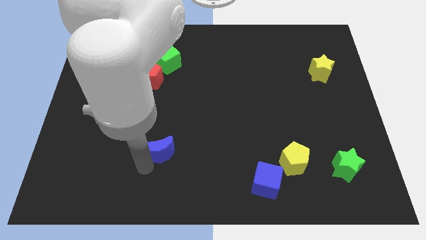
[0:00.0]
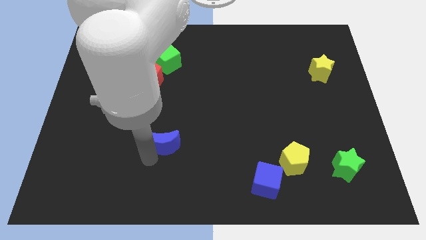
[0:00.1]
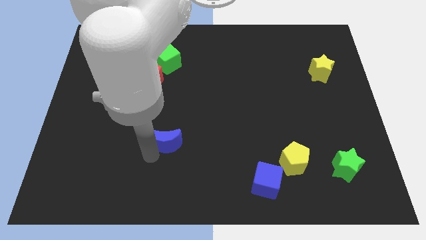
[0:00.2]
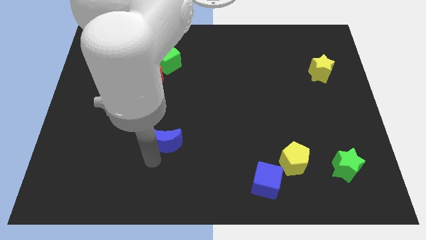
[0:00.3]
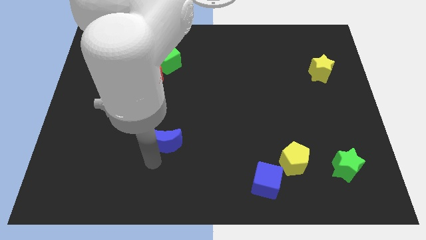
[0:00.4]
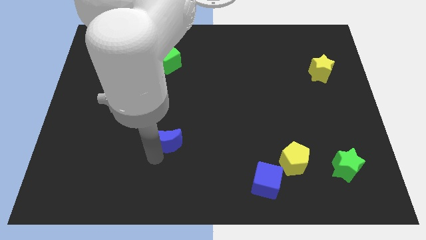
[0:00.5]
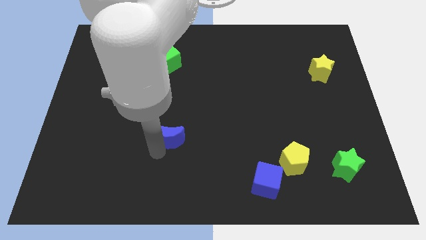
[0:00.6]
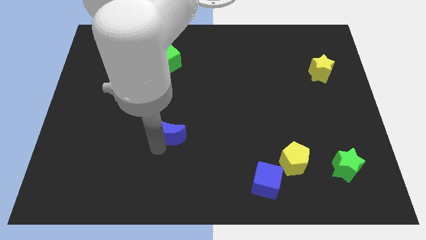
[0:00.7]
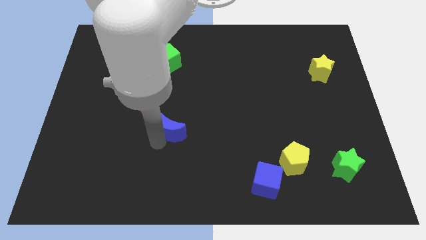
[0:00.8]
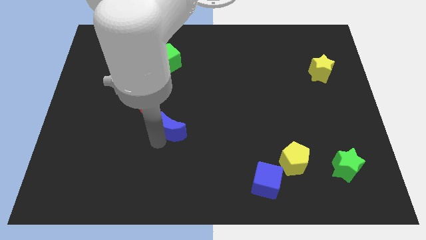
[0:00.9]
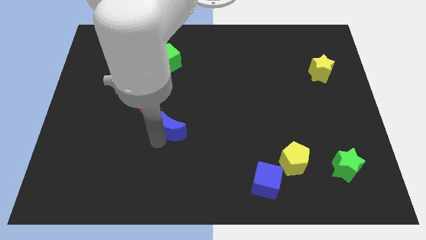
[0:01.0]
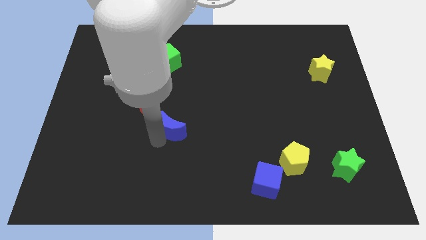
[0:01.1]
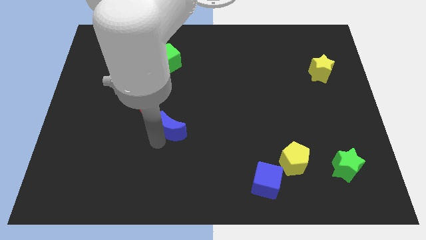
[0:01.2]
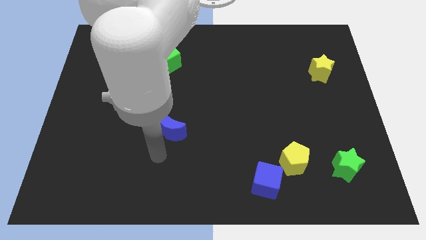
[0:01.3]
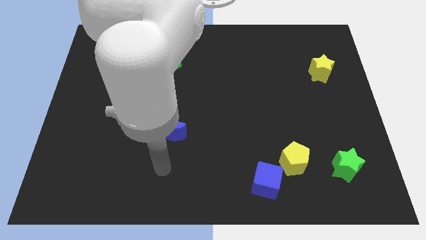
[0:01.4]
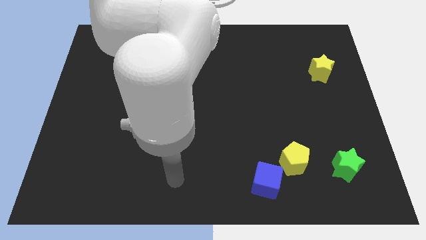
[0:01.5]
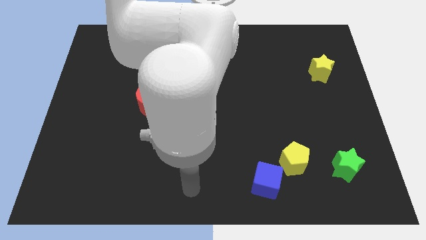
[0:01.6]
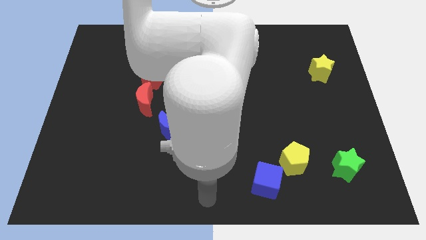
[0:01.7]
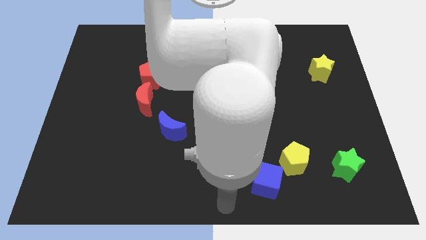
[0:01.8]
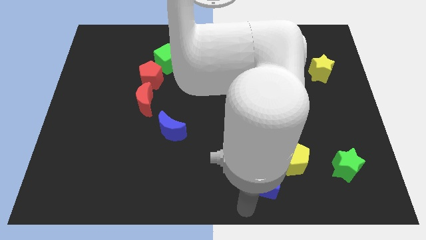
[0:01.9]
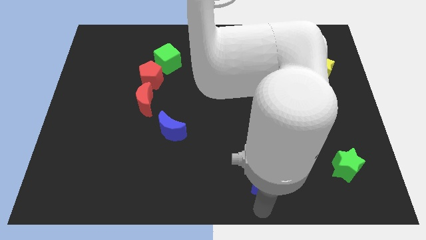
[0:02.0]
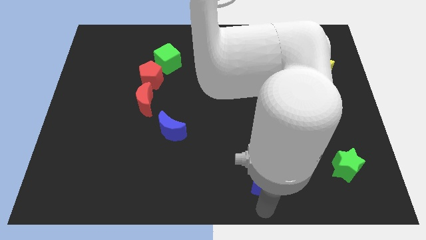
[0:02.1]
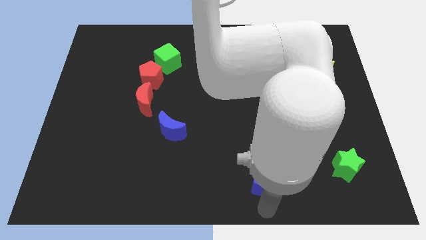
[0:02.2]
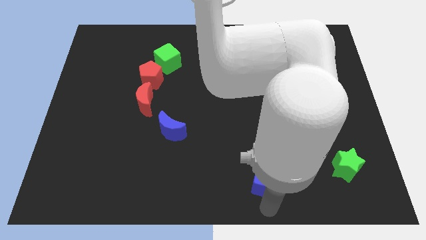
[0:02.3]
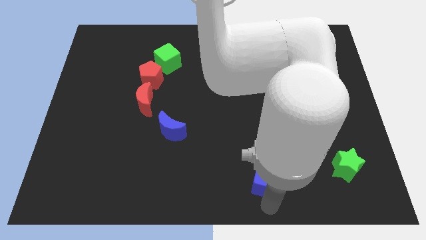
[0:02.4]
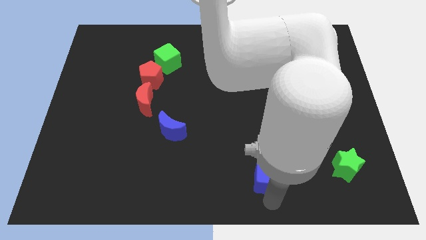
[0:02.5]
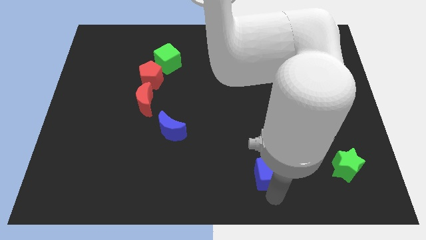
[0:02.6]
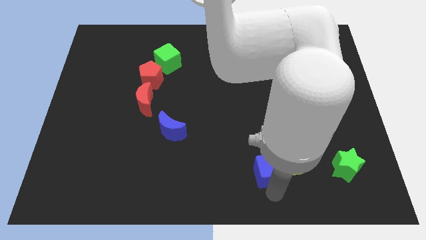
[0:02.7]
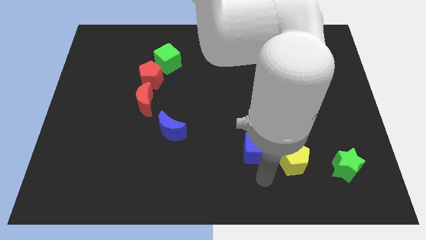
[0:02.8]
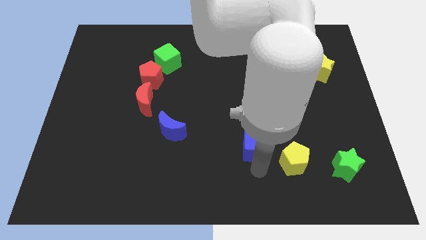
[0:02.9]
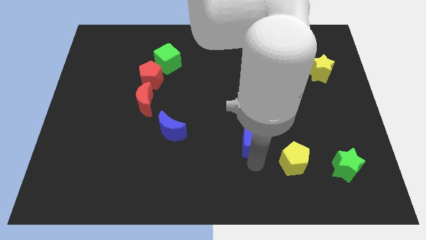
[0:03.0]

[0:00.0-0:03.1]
push blue cube slightly towards up

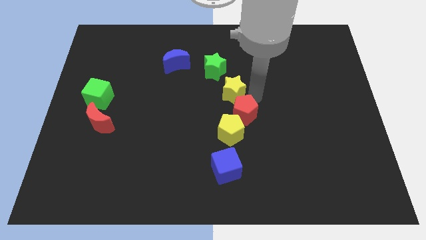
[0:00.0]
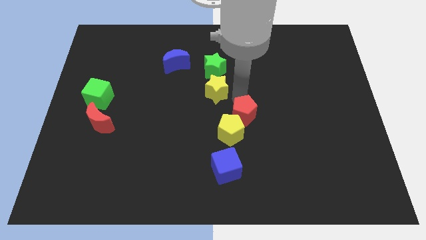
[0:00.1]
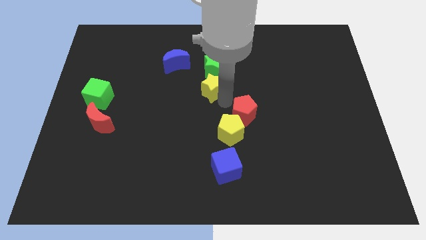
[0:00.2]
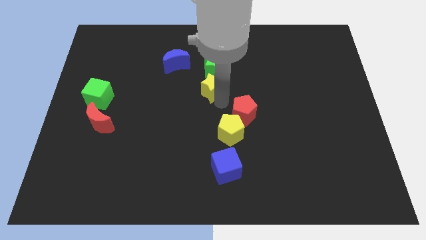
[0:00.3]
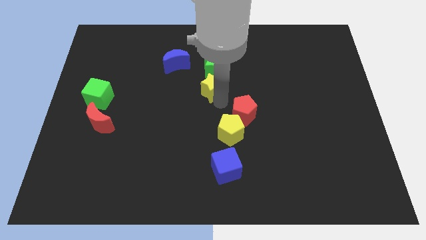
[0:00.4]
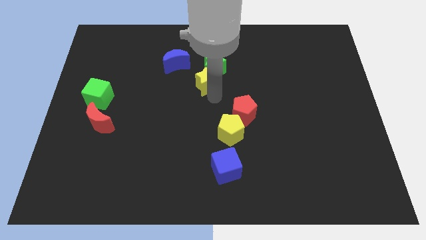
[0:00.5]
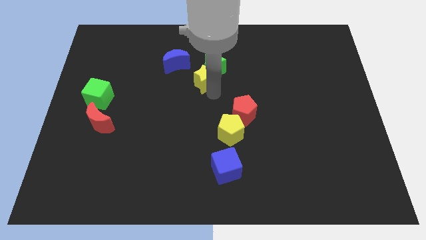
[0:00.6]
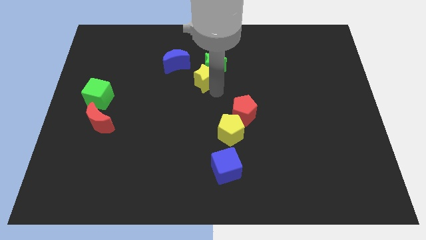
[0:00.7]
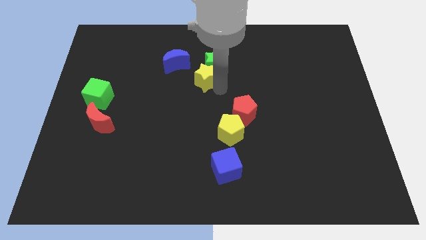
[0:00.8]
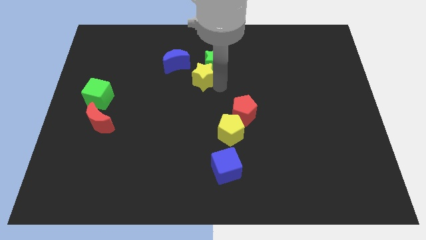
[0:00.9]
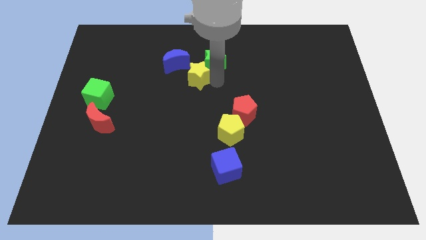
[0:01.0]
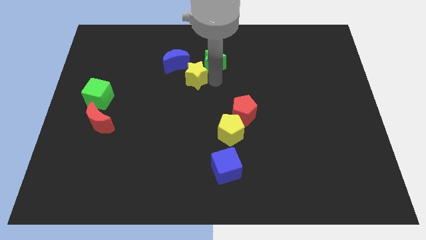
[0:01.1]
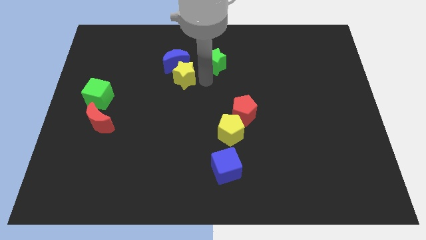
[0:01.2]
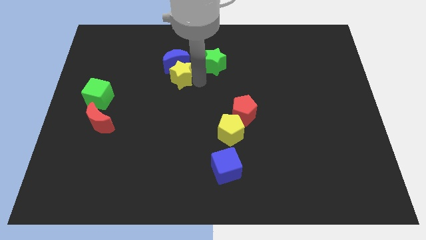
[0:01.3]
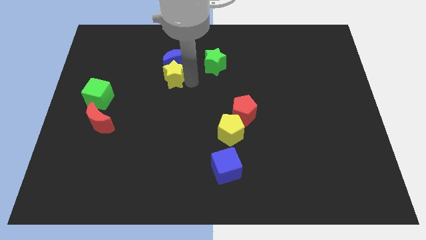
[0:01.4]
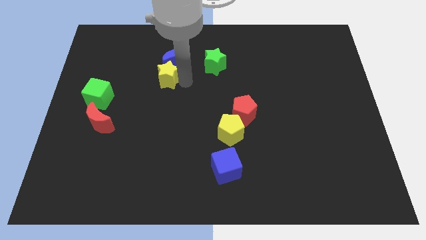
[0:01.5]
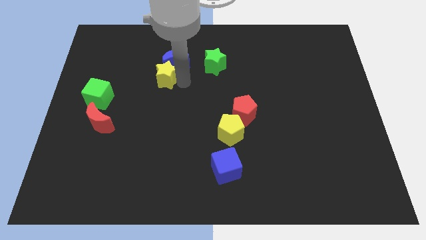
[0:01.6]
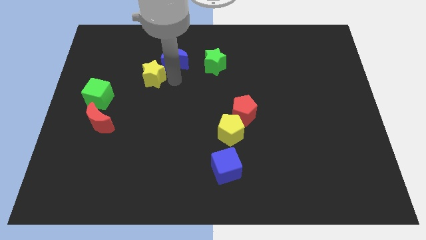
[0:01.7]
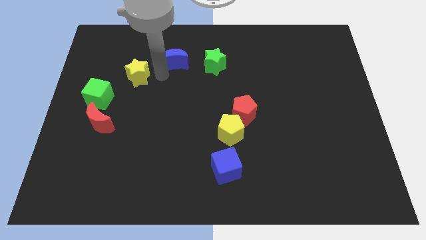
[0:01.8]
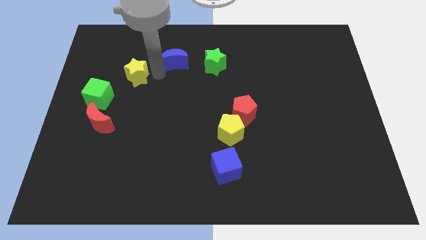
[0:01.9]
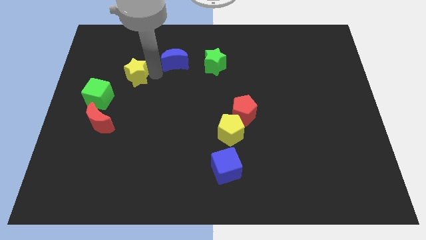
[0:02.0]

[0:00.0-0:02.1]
push the yellow star in between green cube and blue crescent

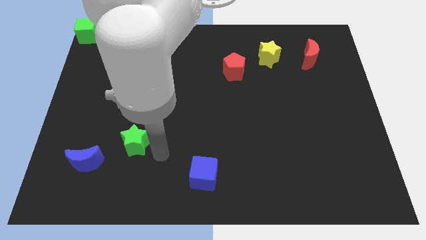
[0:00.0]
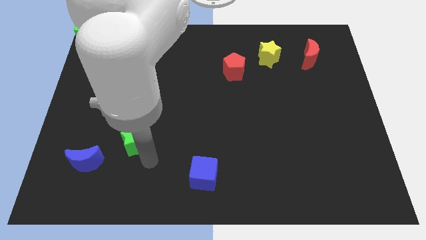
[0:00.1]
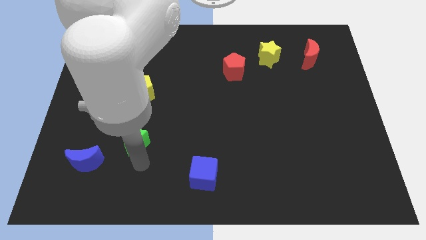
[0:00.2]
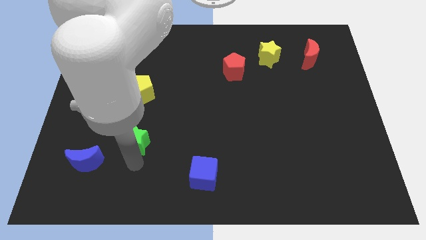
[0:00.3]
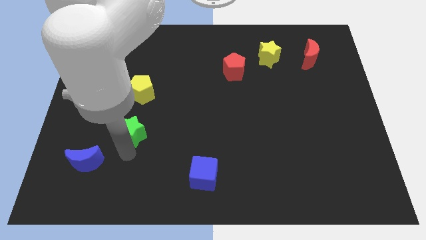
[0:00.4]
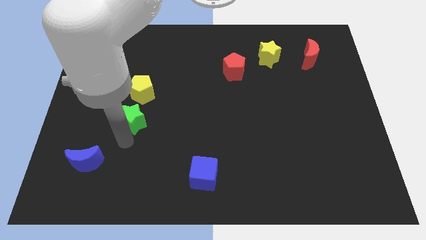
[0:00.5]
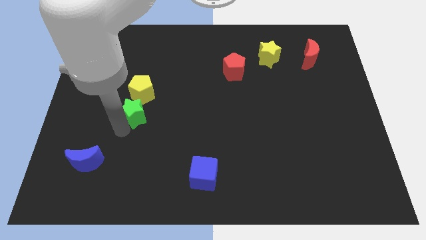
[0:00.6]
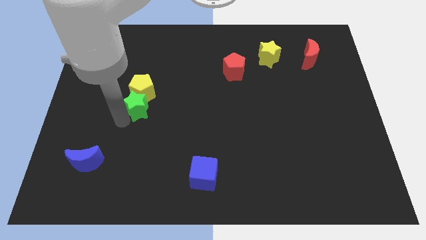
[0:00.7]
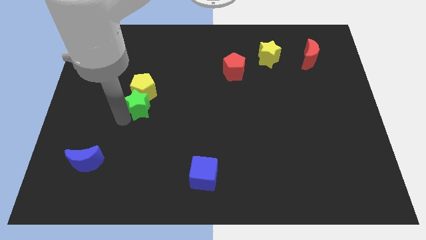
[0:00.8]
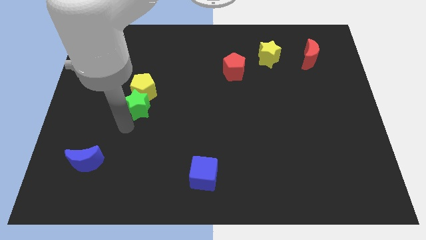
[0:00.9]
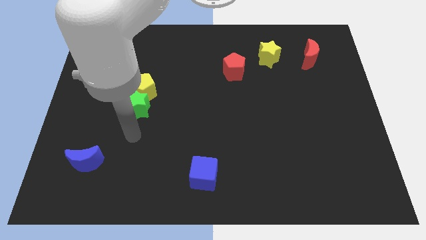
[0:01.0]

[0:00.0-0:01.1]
slide green star up below the yellow pentagon

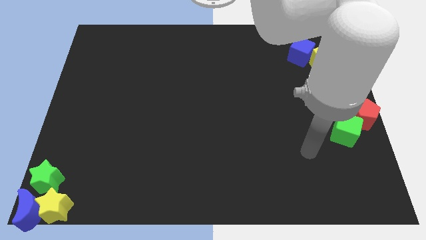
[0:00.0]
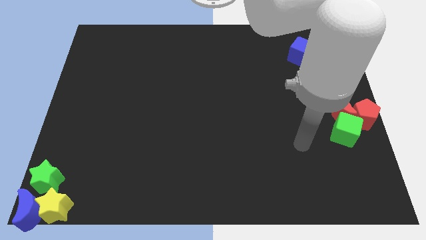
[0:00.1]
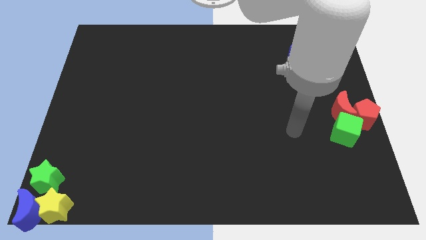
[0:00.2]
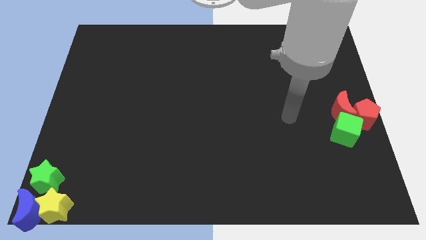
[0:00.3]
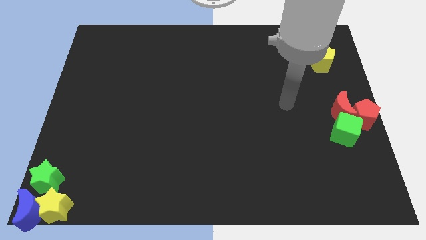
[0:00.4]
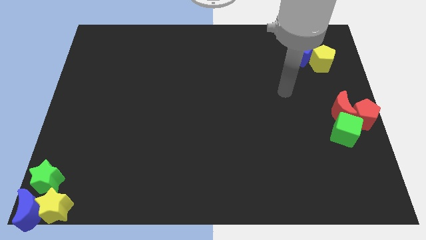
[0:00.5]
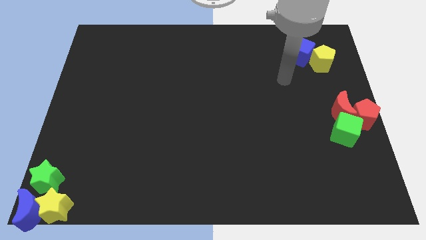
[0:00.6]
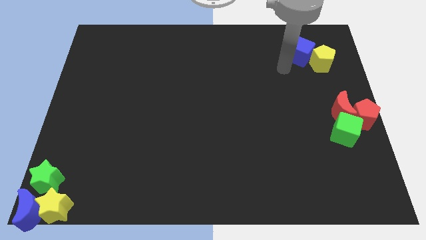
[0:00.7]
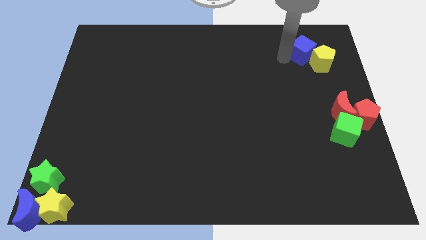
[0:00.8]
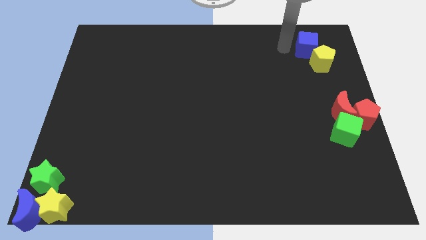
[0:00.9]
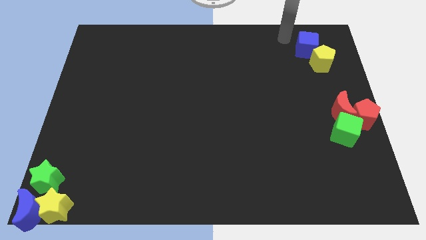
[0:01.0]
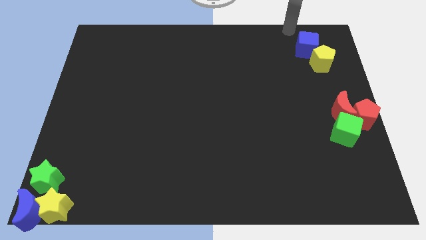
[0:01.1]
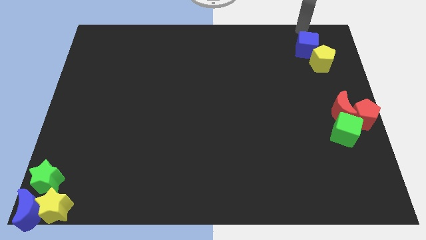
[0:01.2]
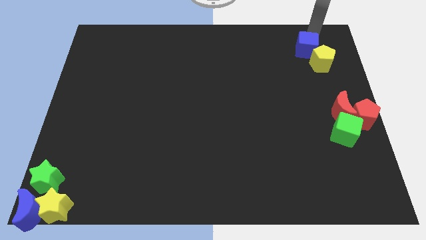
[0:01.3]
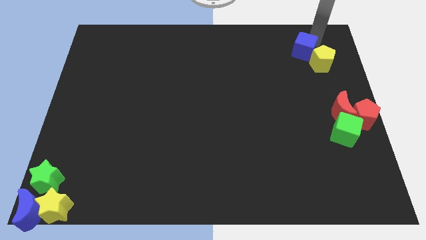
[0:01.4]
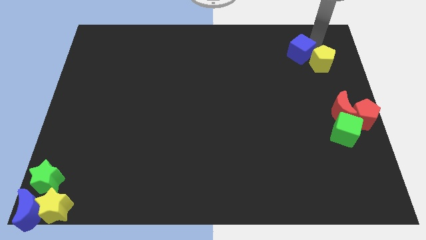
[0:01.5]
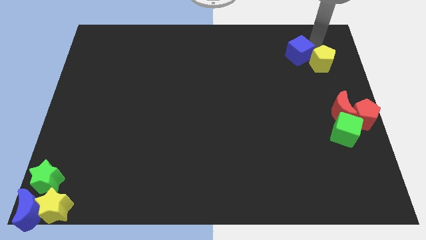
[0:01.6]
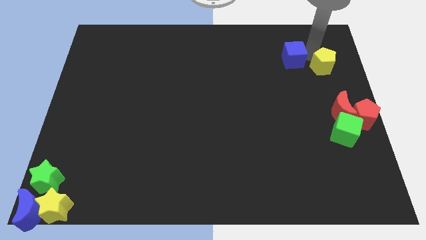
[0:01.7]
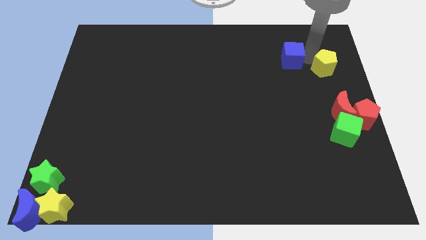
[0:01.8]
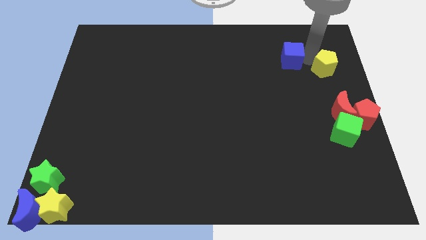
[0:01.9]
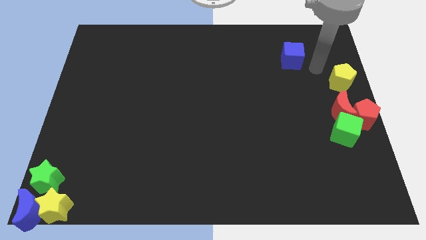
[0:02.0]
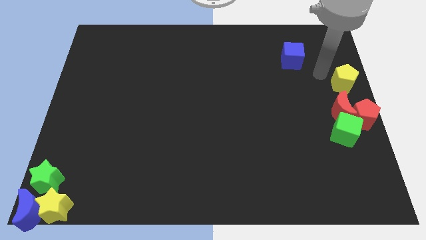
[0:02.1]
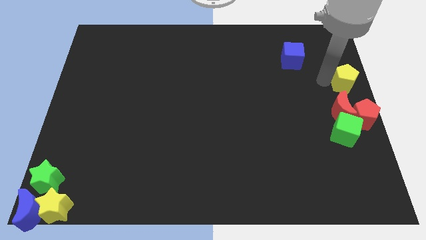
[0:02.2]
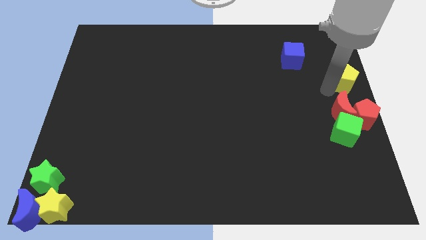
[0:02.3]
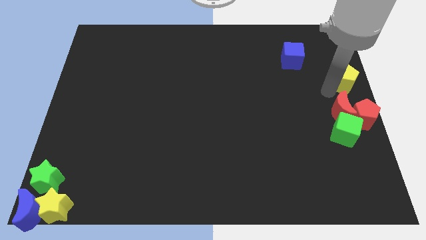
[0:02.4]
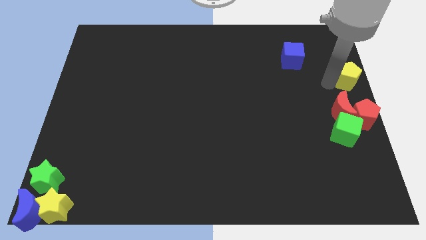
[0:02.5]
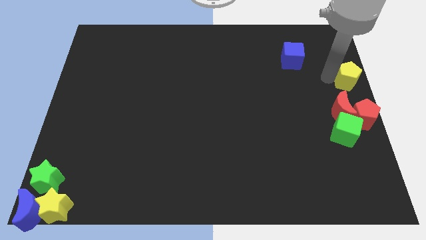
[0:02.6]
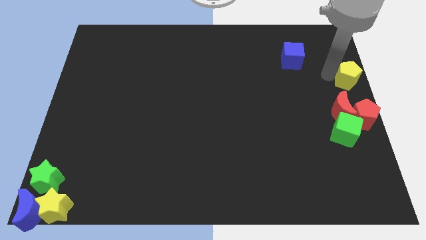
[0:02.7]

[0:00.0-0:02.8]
place the yellow pentagon above the group of red moon
